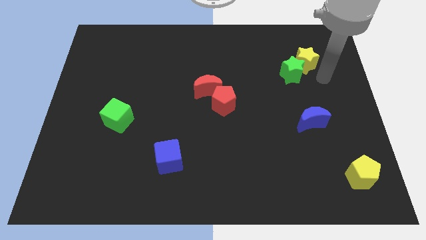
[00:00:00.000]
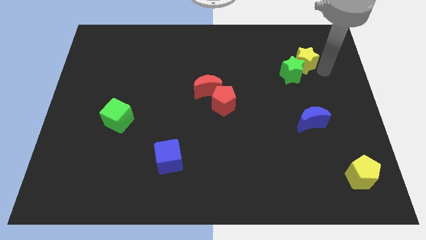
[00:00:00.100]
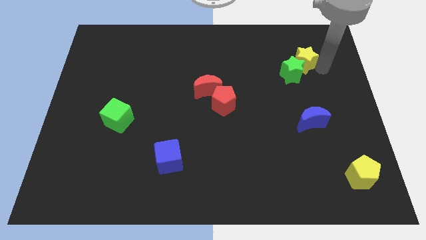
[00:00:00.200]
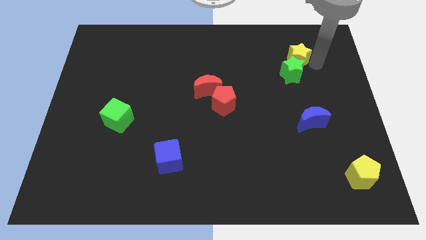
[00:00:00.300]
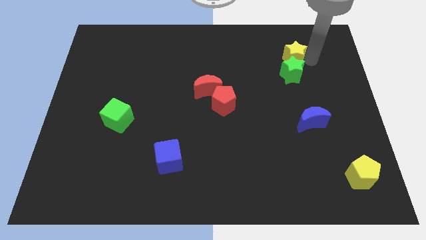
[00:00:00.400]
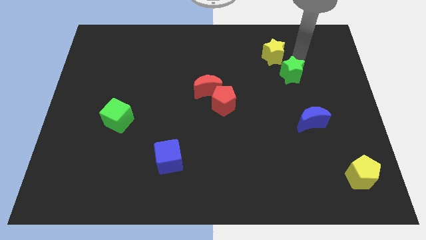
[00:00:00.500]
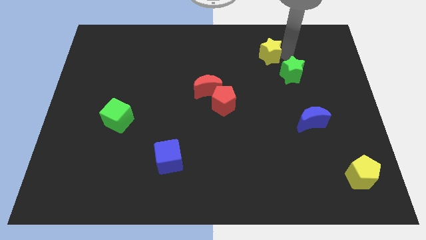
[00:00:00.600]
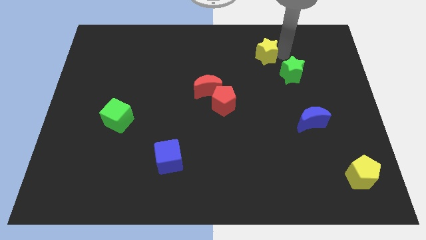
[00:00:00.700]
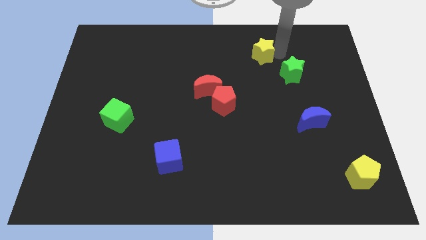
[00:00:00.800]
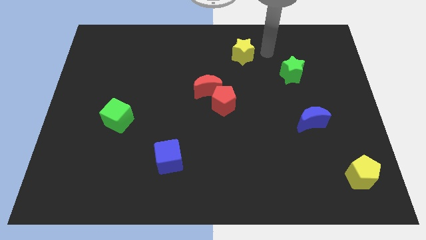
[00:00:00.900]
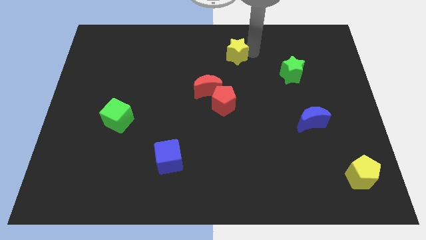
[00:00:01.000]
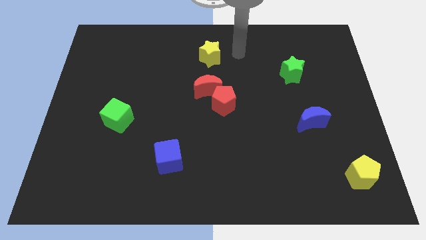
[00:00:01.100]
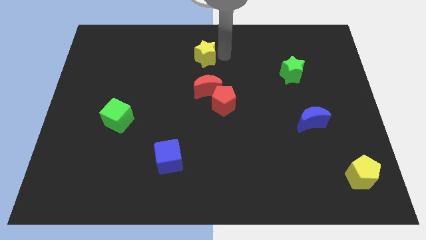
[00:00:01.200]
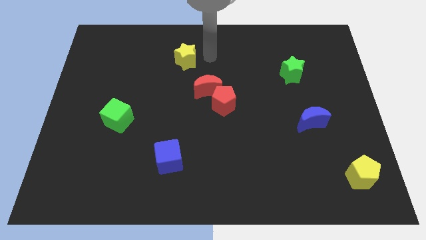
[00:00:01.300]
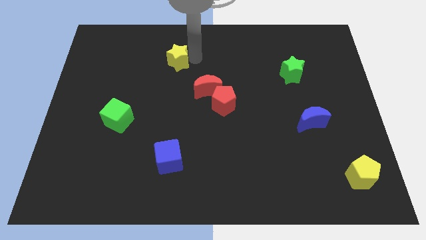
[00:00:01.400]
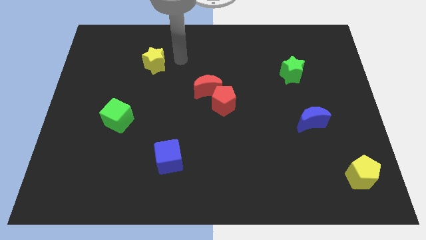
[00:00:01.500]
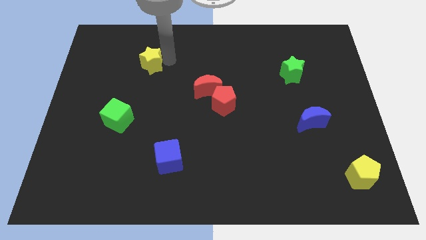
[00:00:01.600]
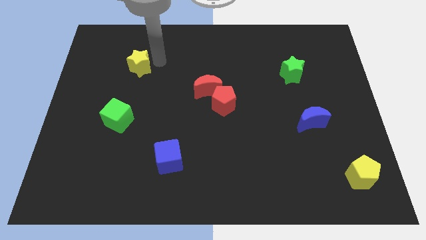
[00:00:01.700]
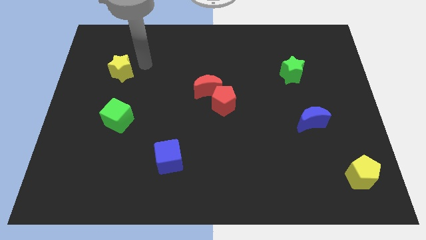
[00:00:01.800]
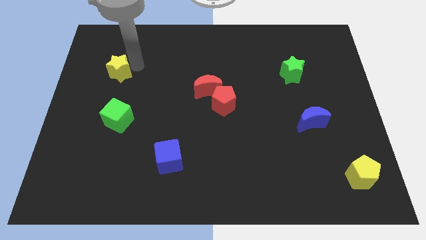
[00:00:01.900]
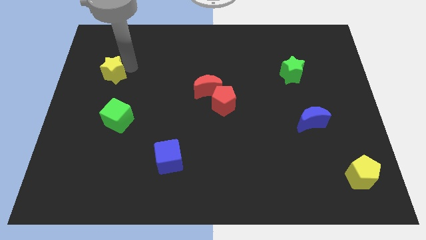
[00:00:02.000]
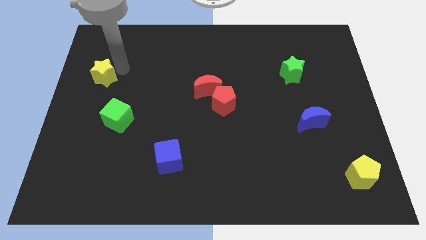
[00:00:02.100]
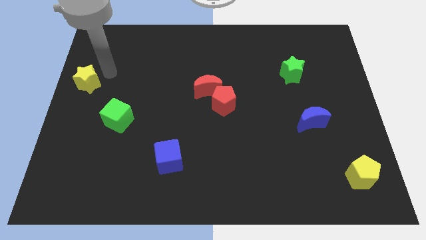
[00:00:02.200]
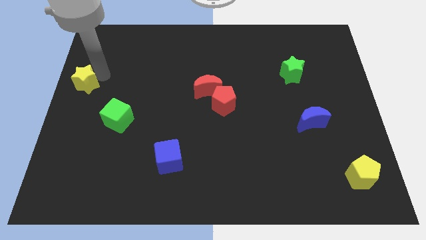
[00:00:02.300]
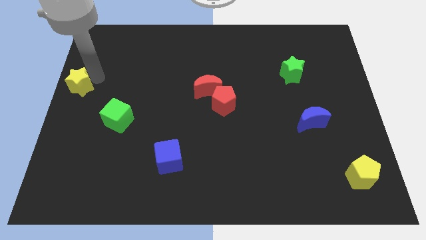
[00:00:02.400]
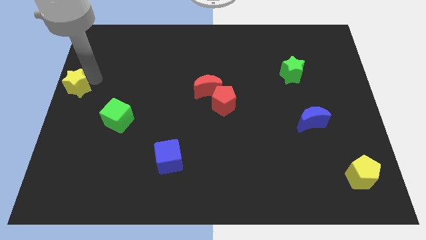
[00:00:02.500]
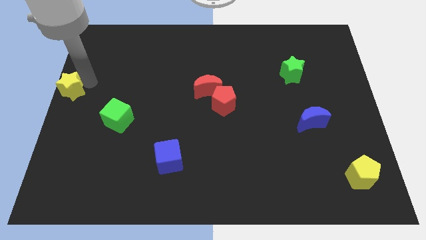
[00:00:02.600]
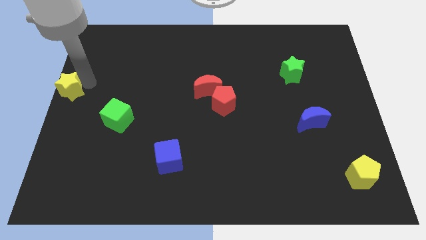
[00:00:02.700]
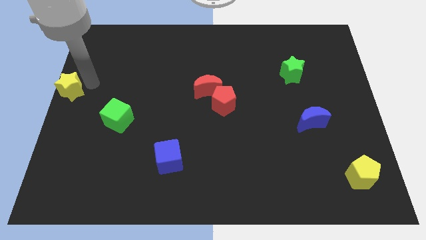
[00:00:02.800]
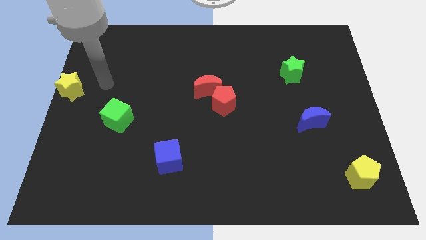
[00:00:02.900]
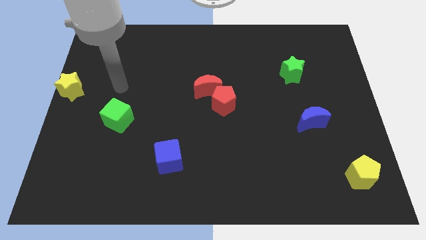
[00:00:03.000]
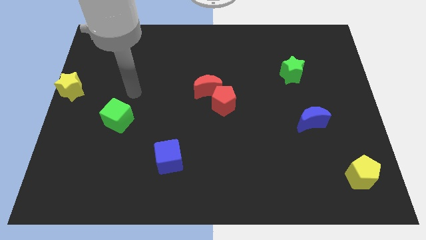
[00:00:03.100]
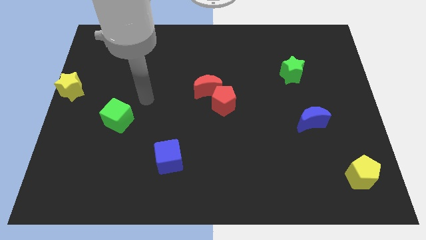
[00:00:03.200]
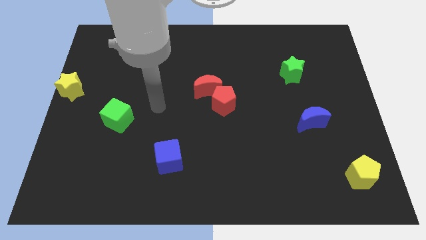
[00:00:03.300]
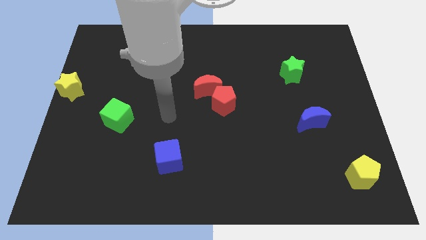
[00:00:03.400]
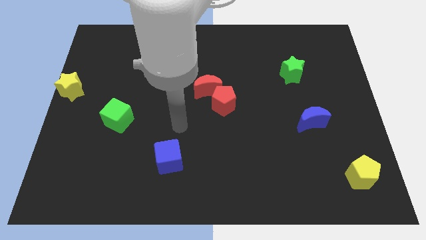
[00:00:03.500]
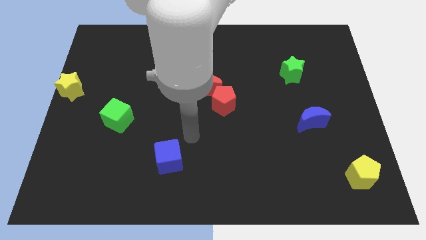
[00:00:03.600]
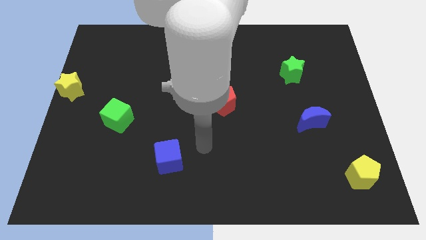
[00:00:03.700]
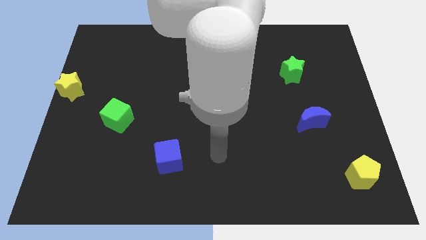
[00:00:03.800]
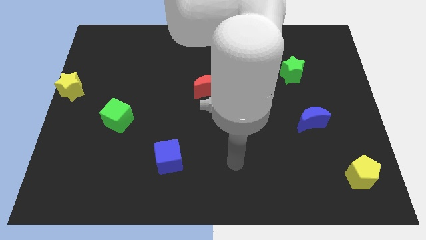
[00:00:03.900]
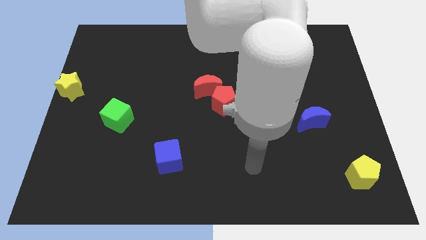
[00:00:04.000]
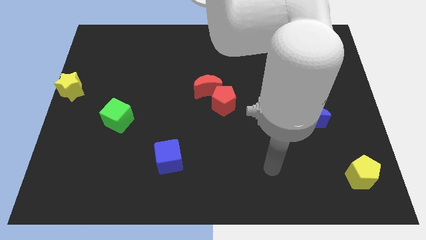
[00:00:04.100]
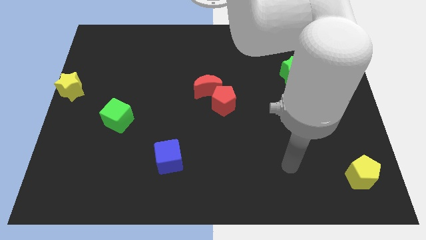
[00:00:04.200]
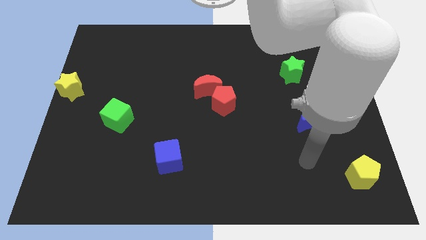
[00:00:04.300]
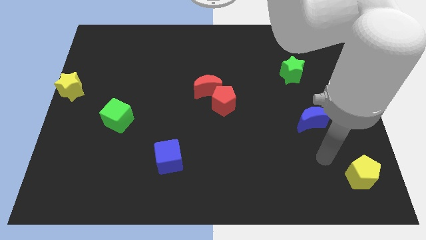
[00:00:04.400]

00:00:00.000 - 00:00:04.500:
move the yellow star to the left center of the board

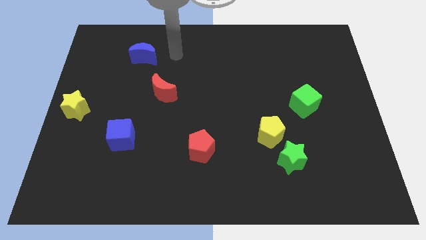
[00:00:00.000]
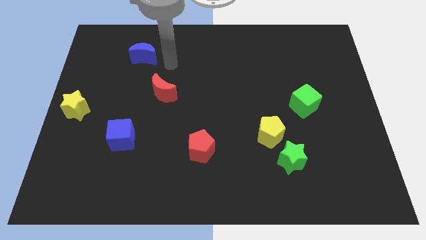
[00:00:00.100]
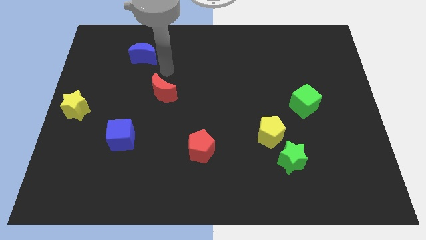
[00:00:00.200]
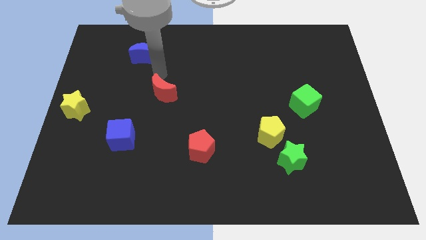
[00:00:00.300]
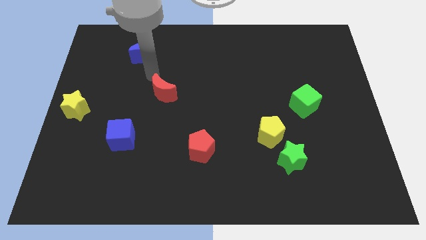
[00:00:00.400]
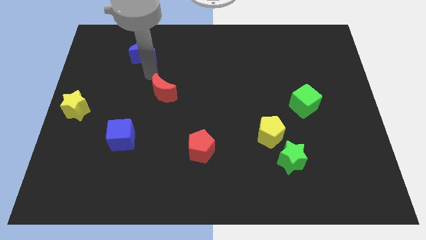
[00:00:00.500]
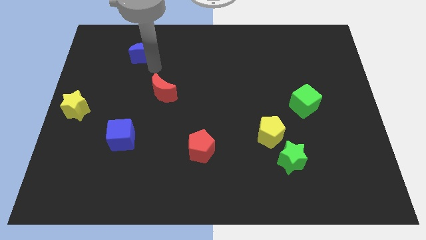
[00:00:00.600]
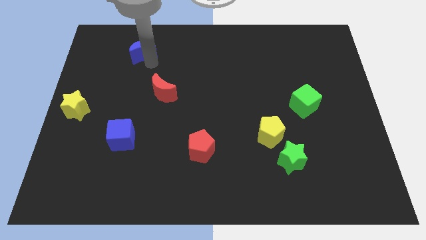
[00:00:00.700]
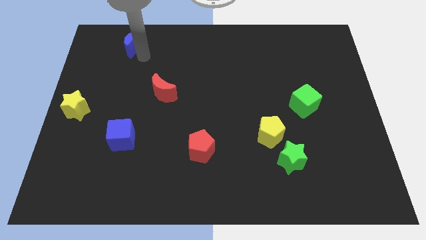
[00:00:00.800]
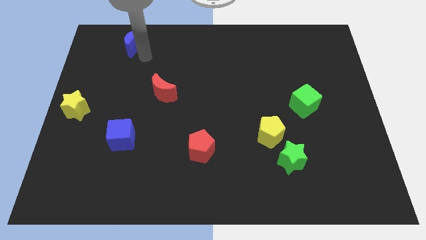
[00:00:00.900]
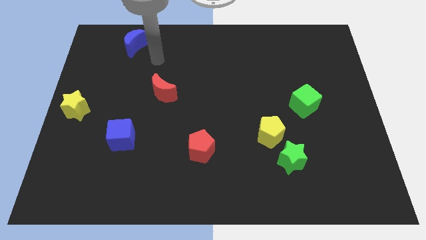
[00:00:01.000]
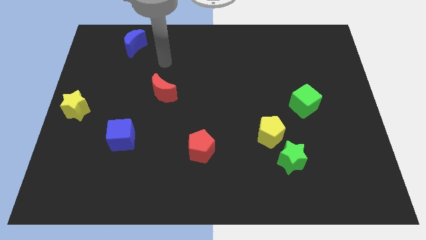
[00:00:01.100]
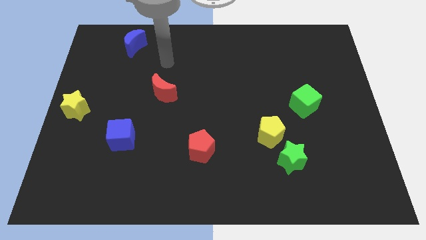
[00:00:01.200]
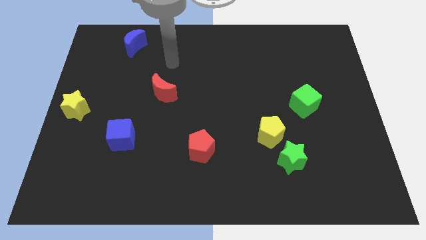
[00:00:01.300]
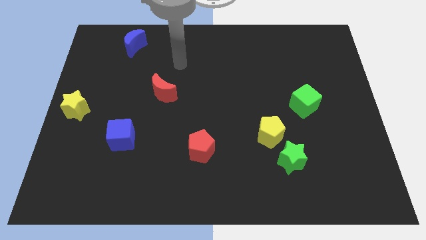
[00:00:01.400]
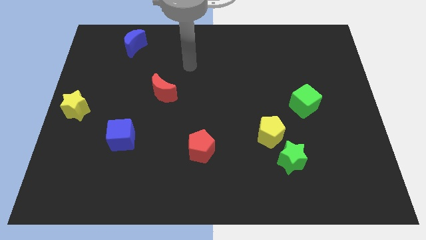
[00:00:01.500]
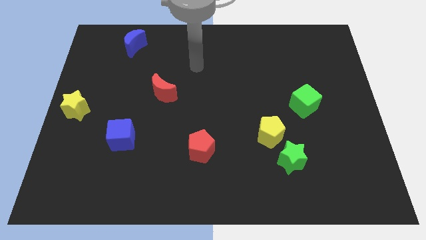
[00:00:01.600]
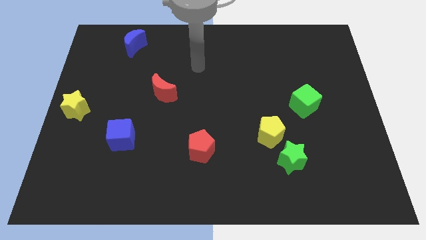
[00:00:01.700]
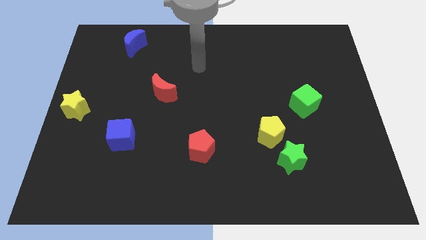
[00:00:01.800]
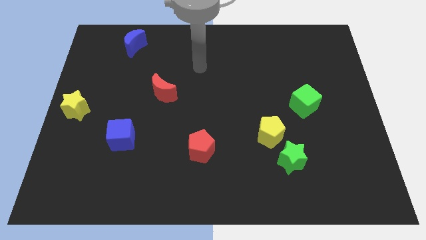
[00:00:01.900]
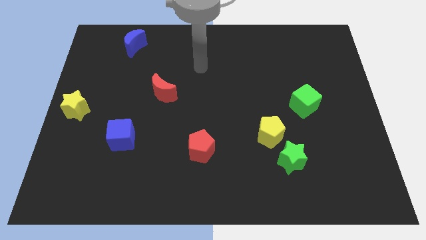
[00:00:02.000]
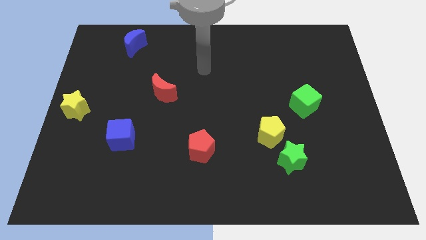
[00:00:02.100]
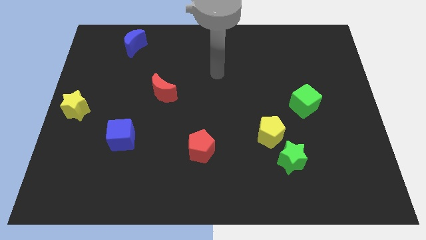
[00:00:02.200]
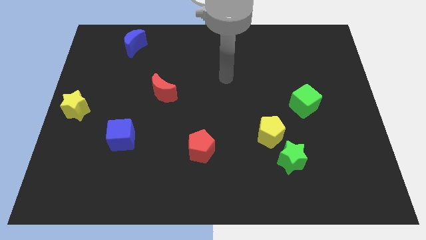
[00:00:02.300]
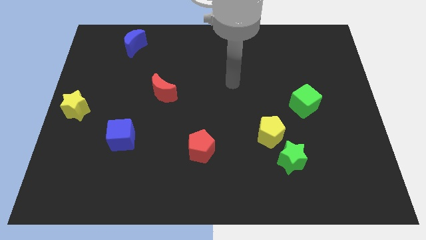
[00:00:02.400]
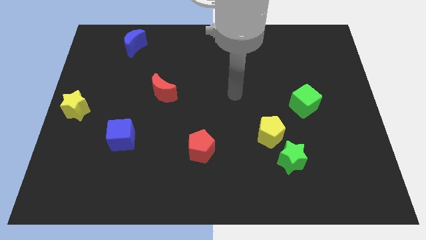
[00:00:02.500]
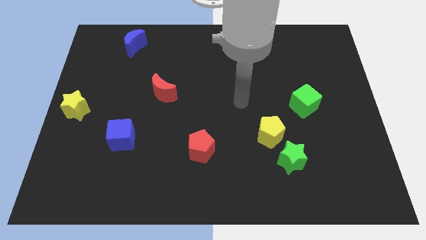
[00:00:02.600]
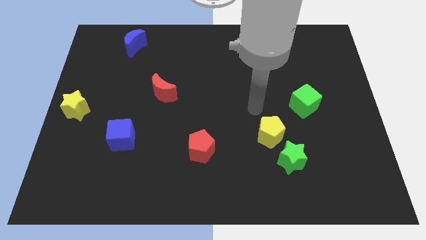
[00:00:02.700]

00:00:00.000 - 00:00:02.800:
move your arm away from the blue moon

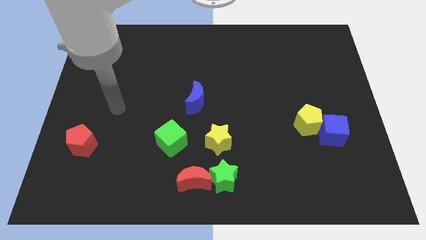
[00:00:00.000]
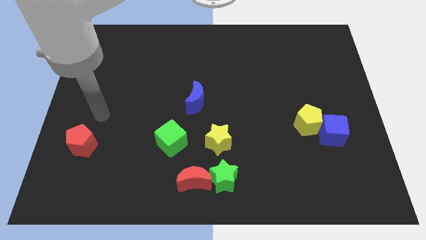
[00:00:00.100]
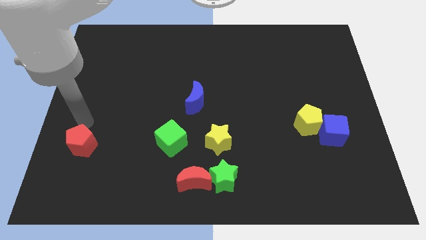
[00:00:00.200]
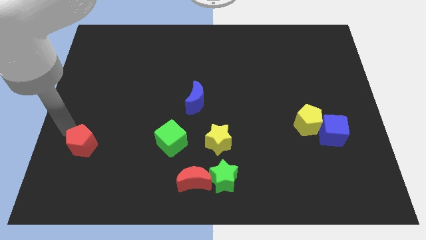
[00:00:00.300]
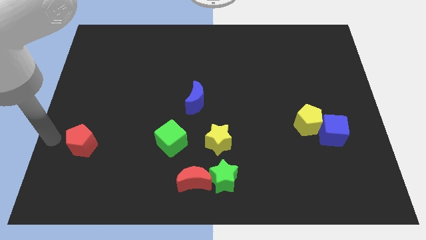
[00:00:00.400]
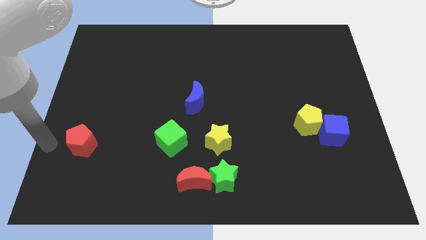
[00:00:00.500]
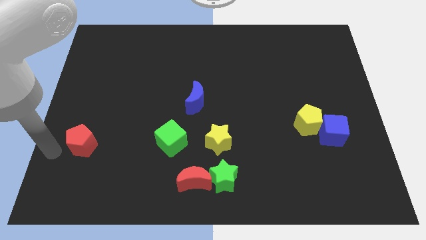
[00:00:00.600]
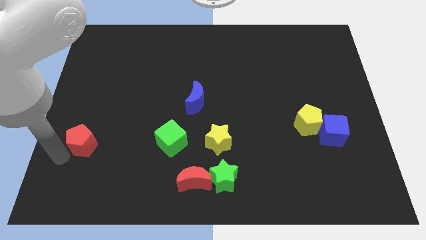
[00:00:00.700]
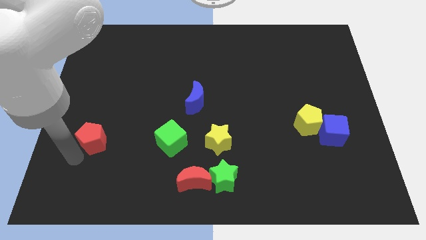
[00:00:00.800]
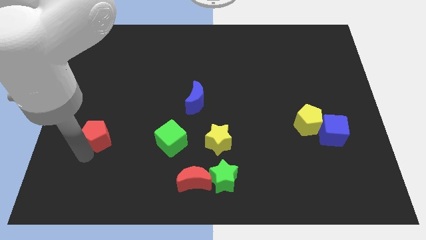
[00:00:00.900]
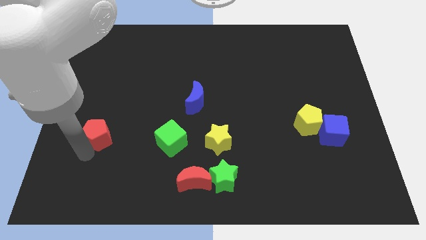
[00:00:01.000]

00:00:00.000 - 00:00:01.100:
slightly push the red pentagon up

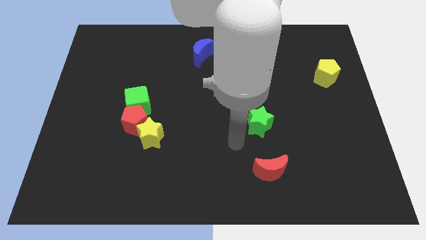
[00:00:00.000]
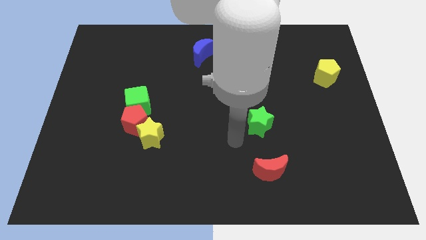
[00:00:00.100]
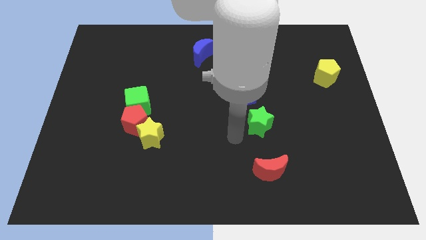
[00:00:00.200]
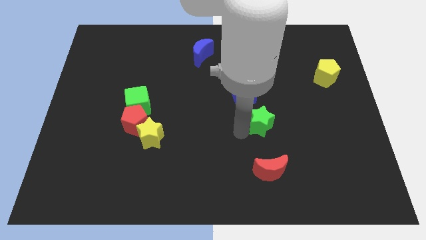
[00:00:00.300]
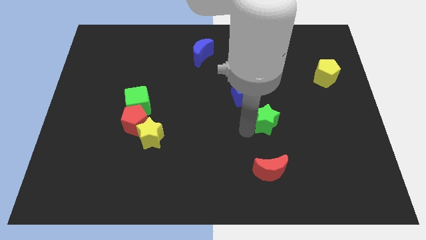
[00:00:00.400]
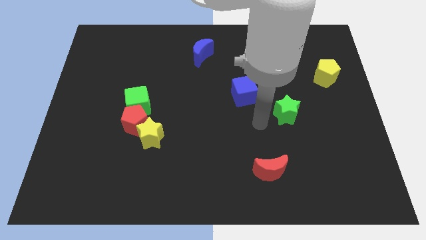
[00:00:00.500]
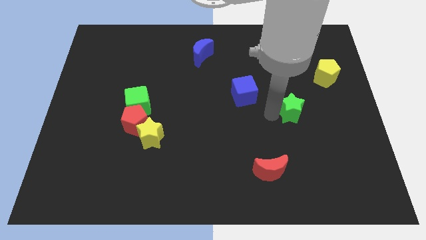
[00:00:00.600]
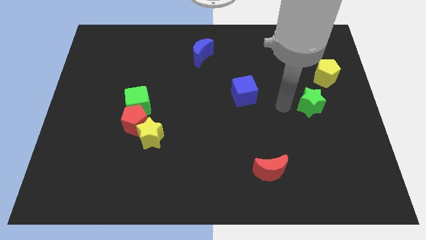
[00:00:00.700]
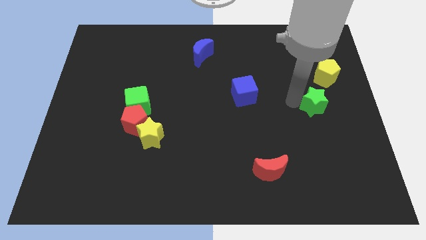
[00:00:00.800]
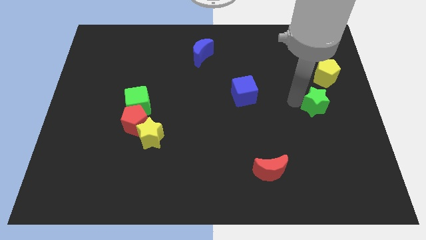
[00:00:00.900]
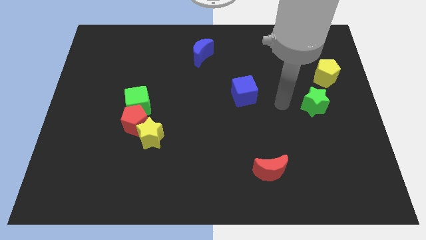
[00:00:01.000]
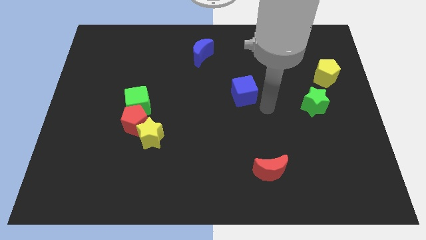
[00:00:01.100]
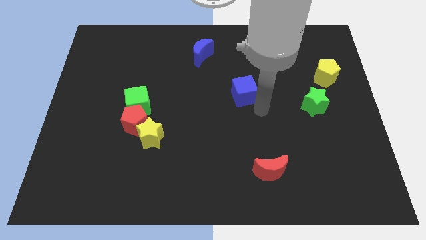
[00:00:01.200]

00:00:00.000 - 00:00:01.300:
push the green star towards the yellow pentagon
